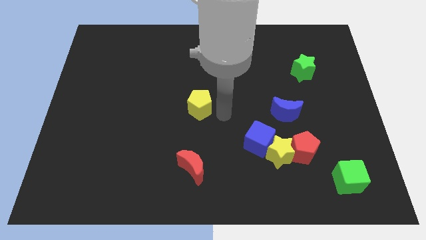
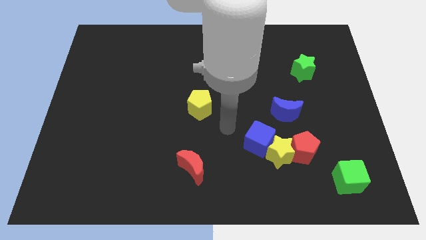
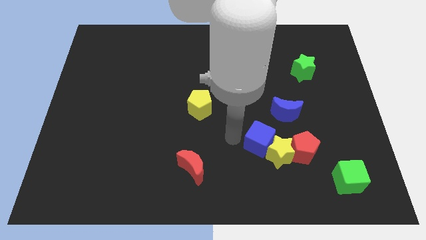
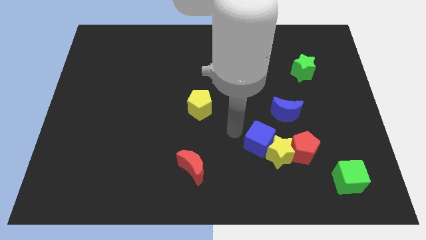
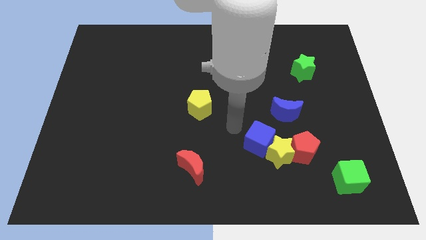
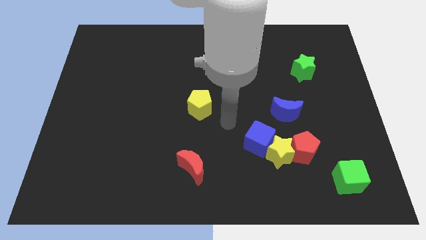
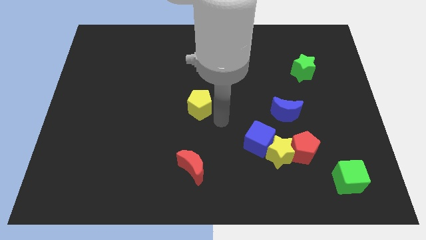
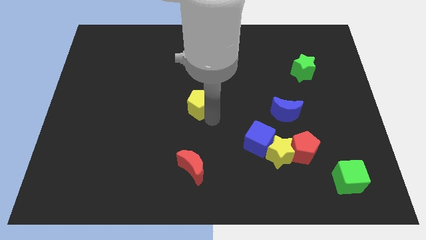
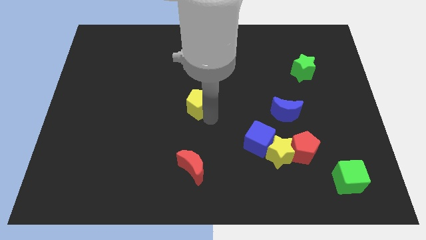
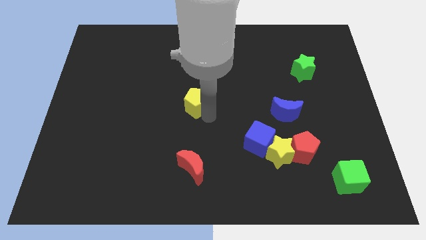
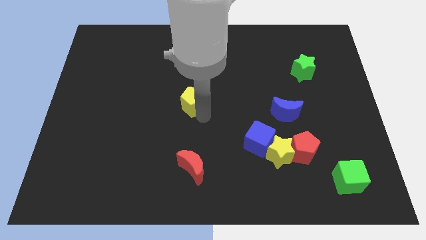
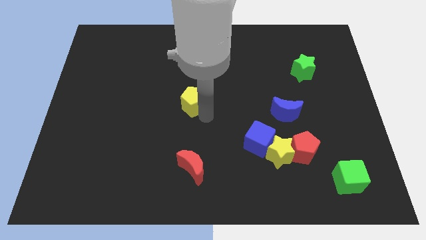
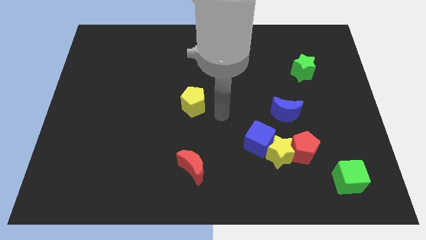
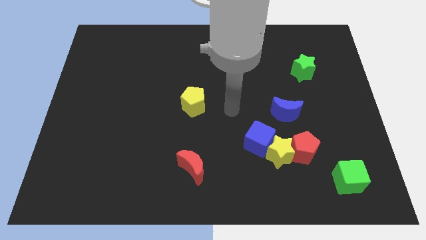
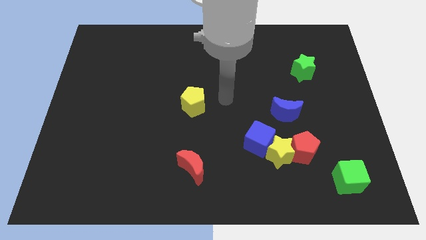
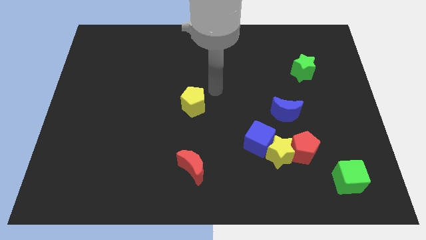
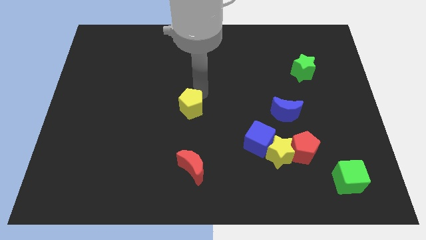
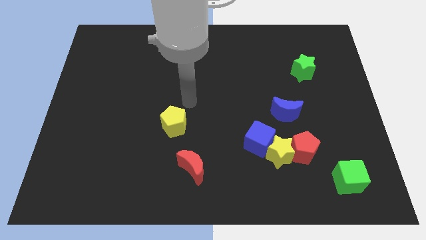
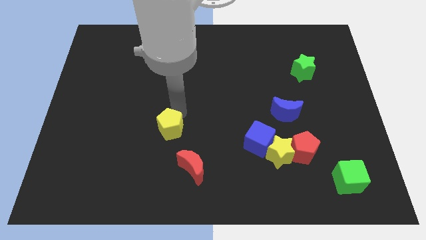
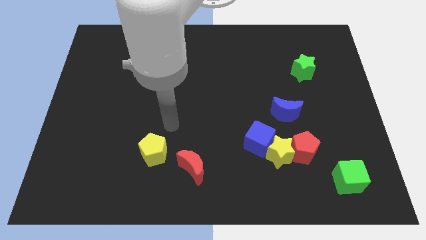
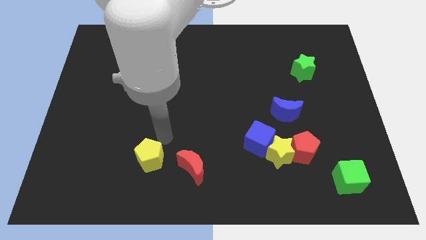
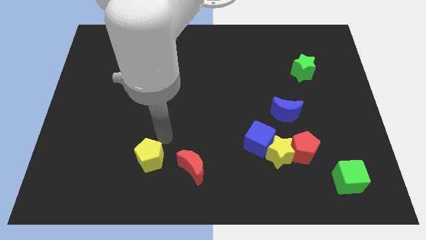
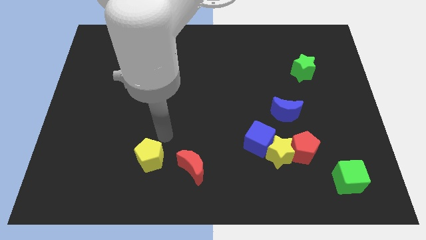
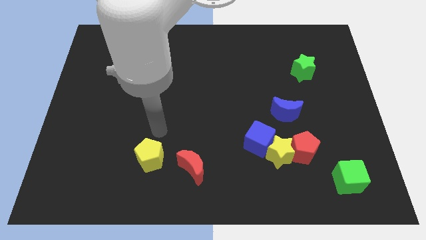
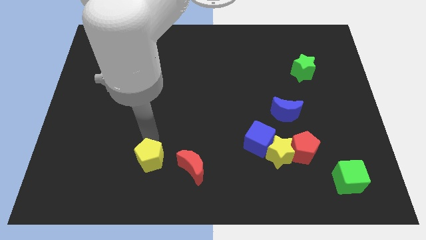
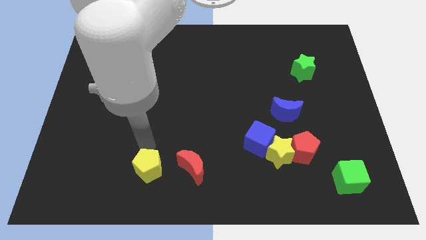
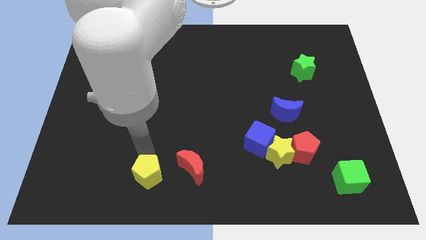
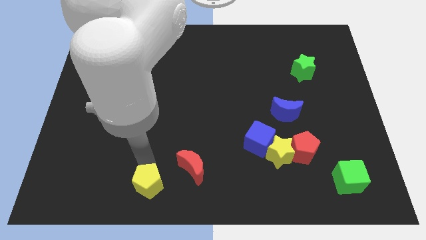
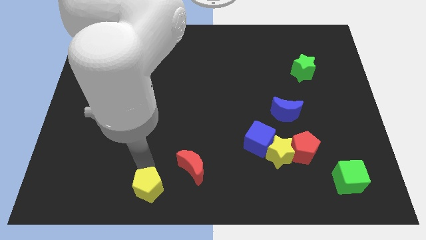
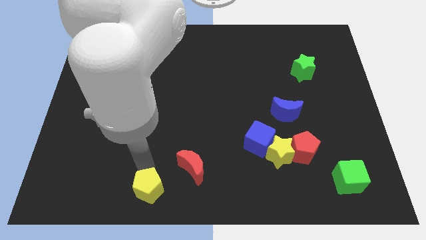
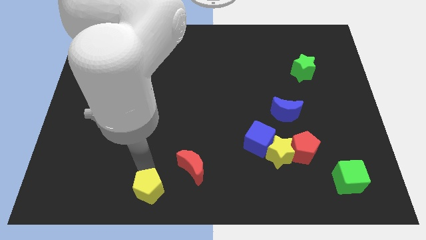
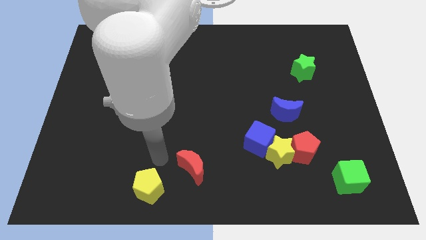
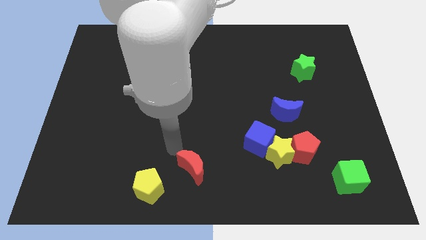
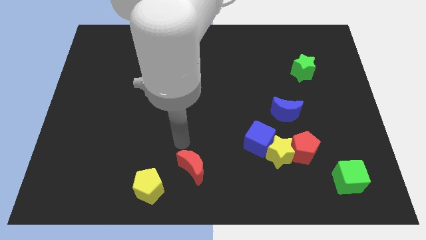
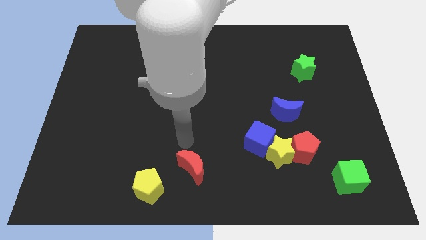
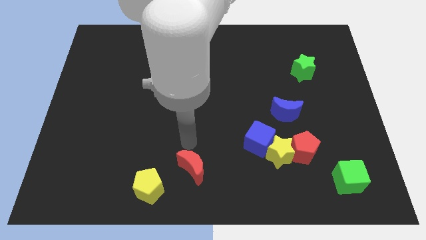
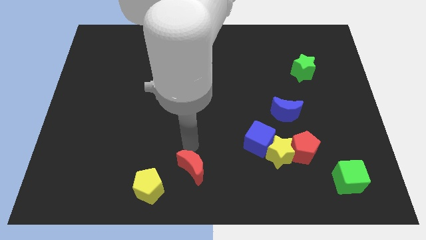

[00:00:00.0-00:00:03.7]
push the yellow pentagon diagonally to the red moon

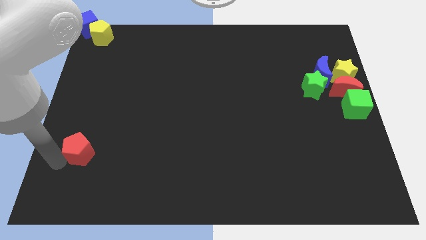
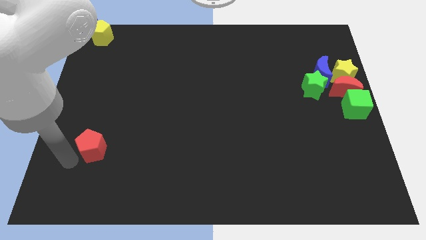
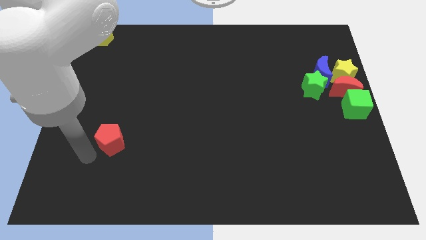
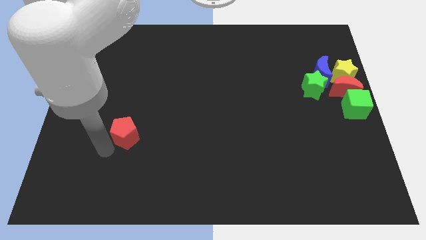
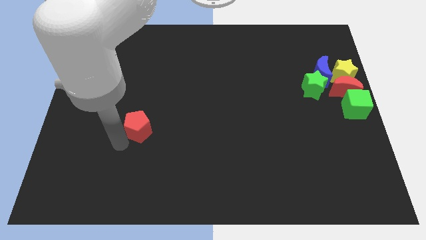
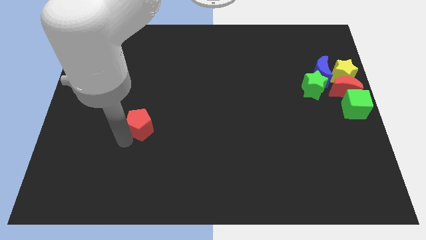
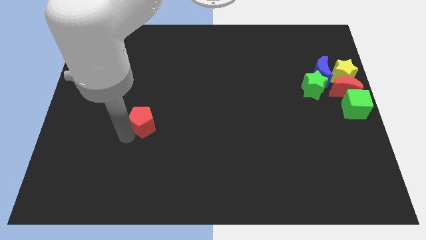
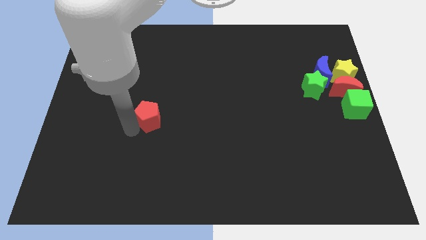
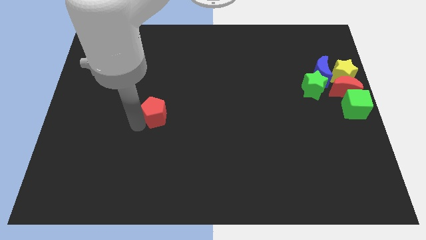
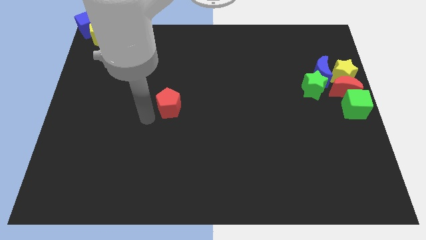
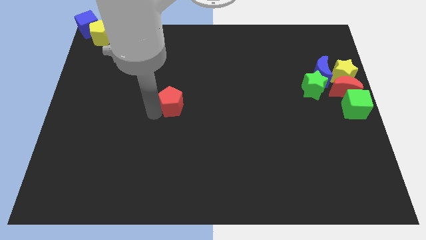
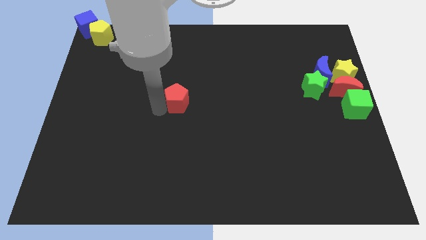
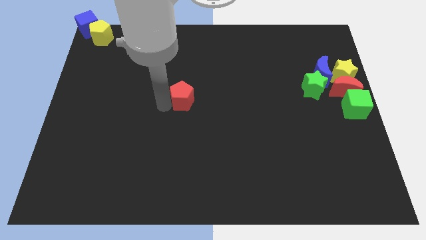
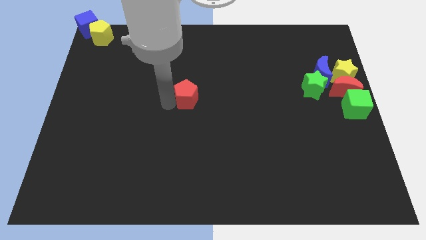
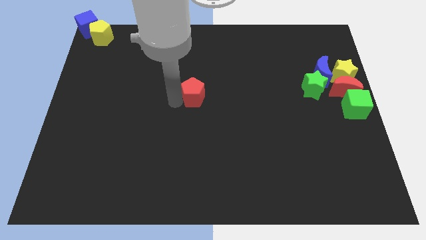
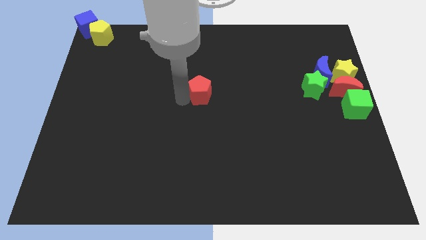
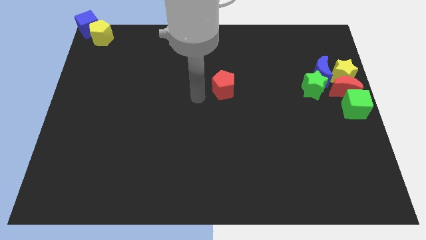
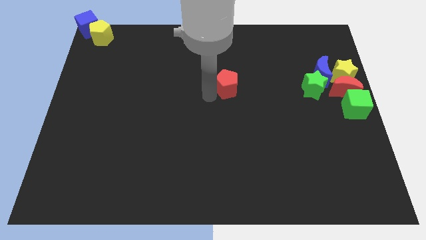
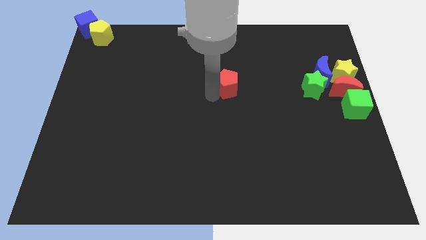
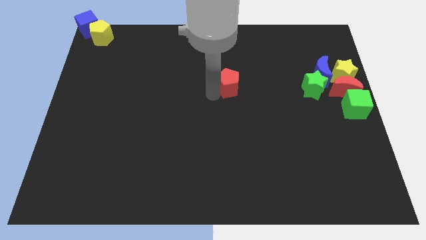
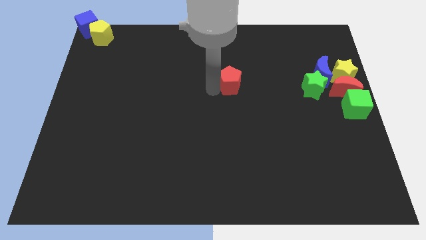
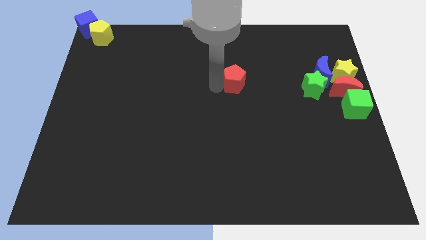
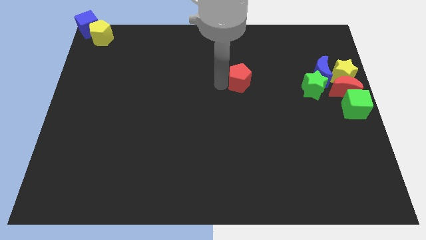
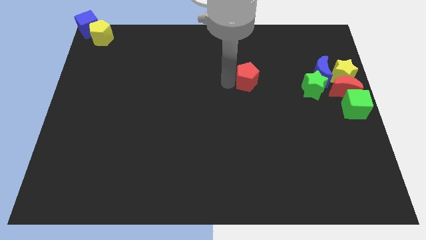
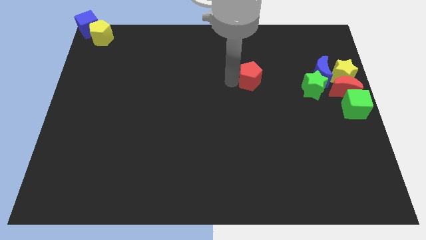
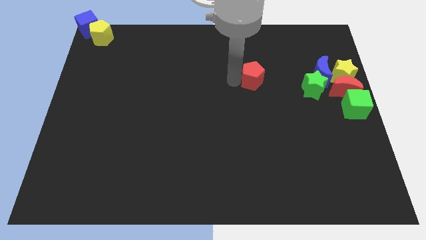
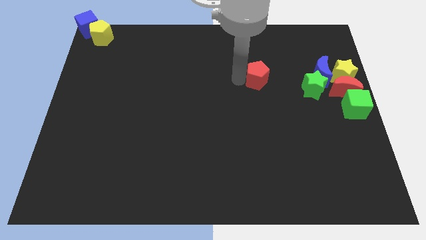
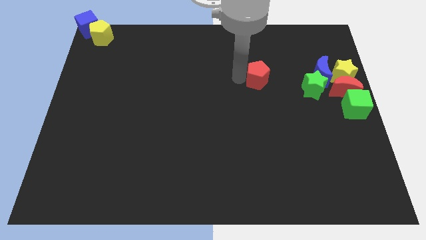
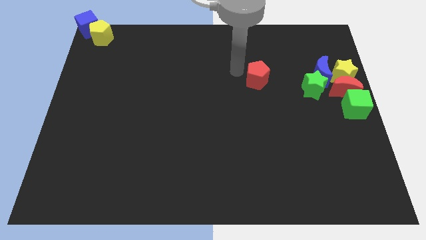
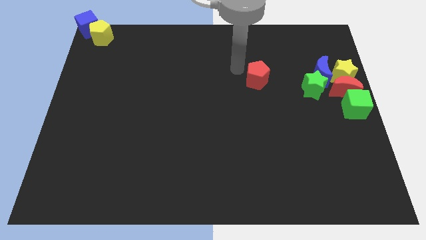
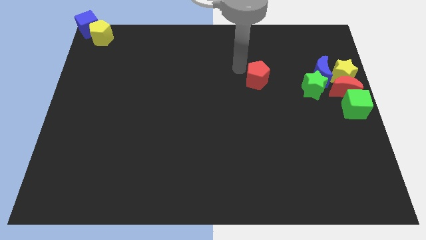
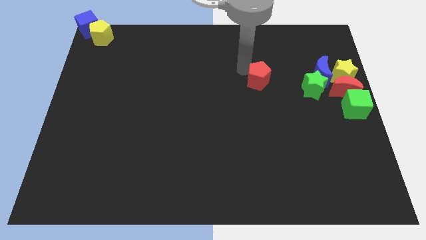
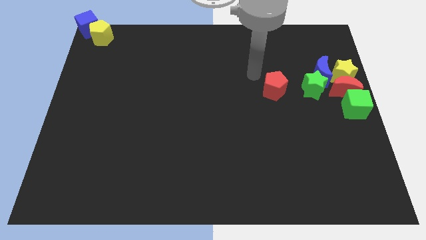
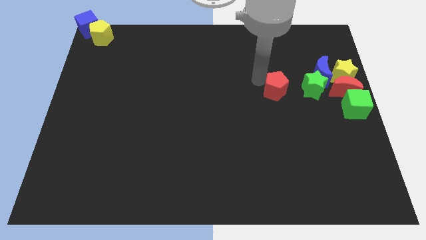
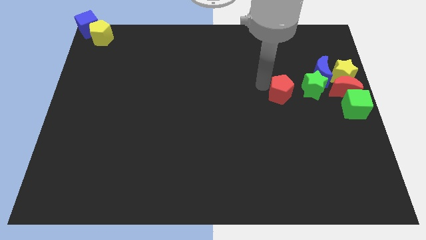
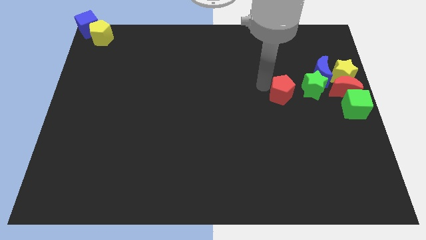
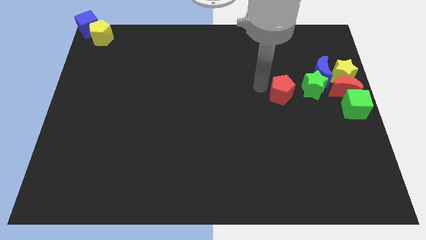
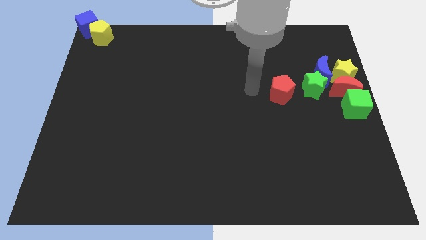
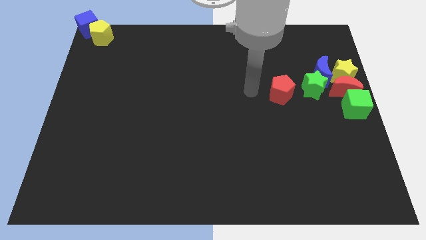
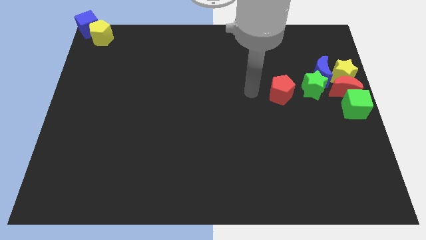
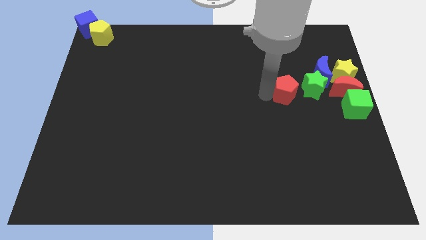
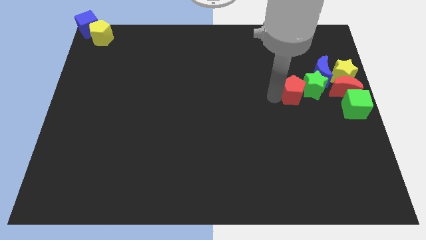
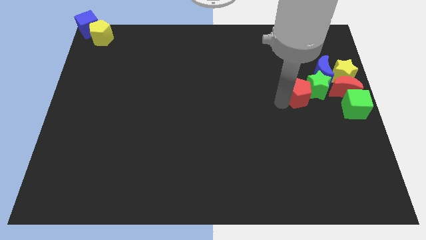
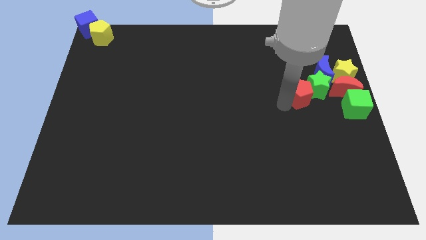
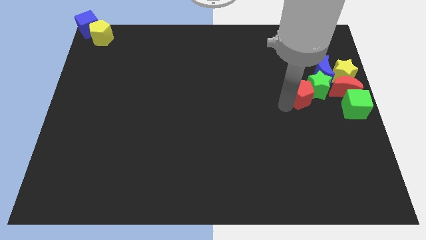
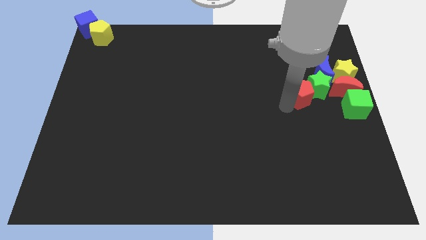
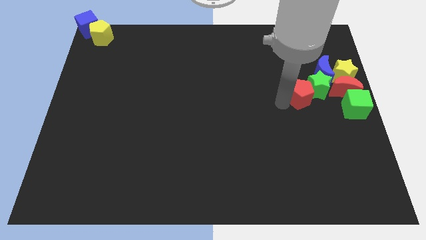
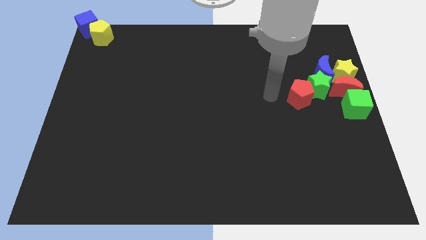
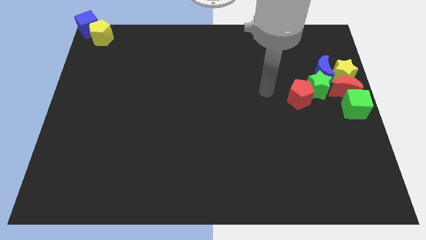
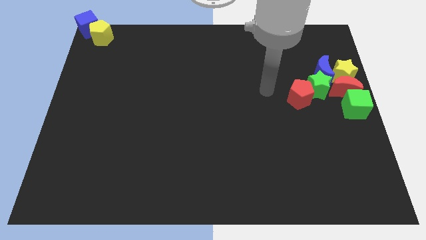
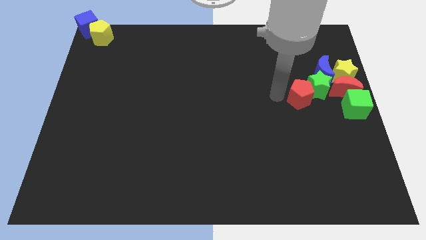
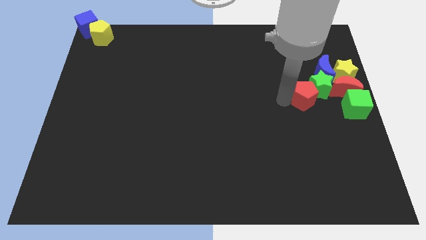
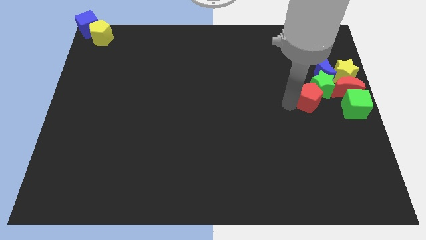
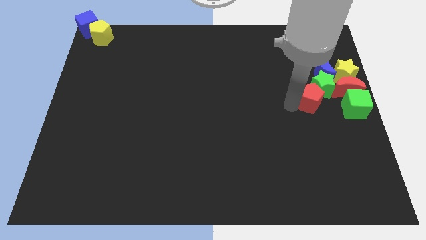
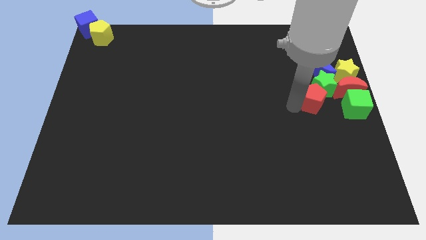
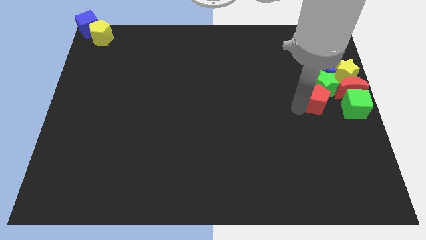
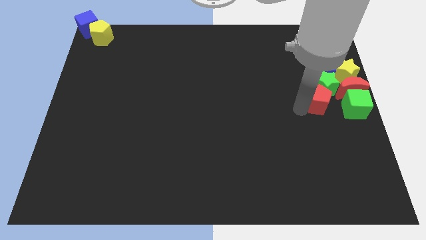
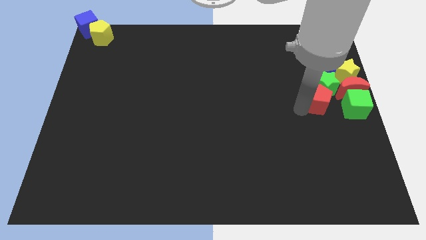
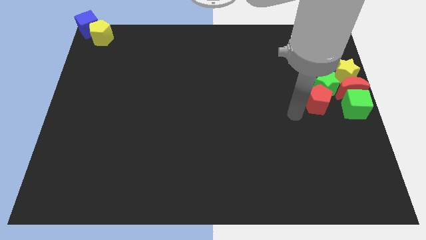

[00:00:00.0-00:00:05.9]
push the red pentagon below to the green star
